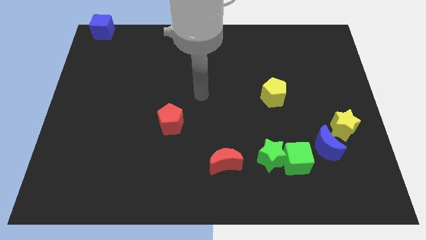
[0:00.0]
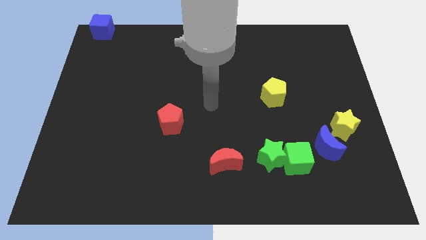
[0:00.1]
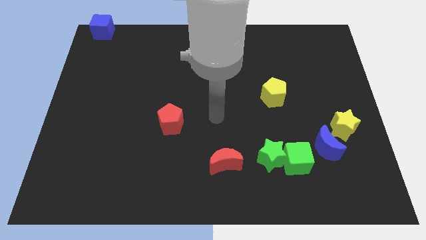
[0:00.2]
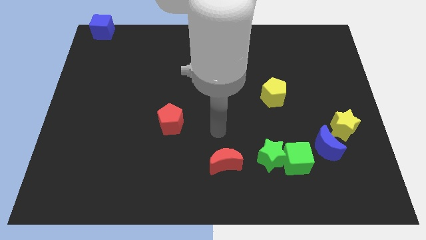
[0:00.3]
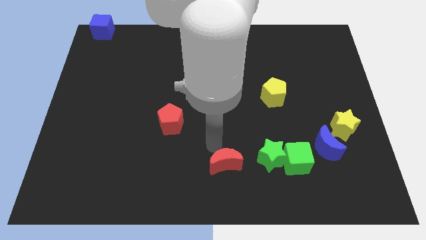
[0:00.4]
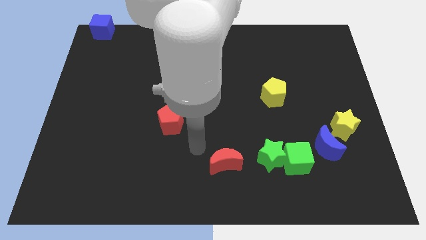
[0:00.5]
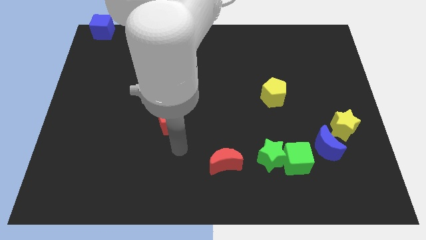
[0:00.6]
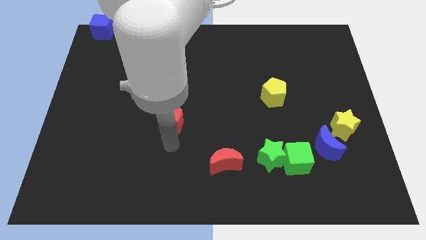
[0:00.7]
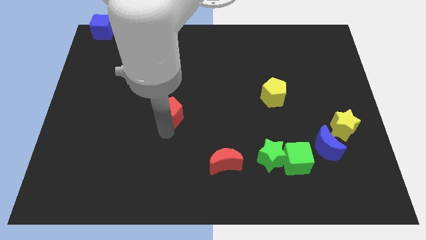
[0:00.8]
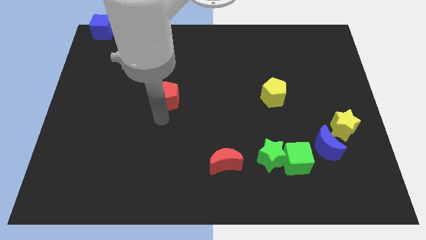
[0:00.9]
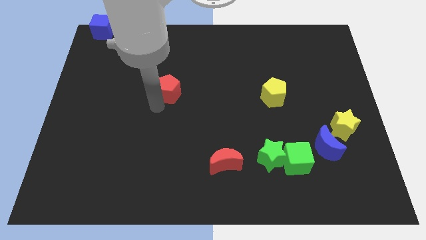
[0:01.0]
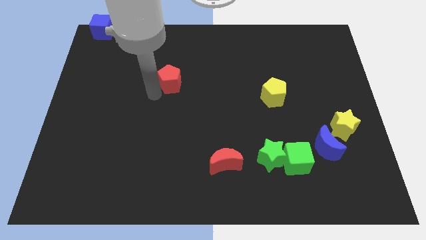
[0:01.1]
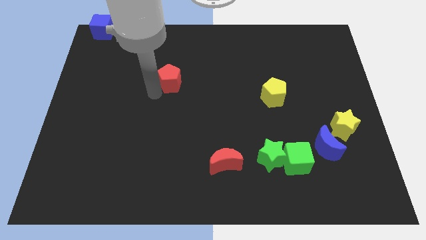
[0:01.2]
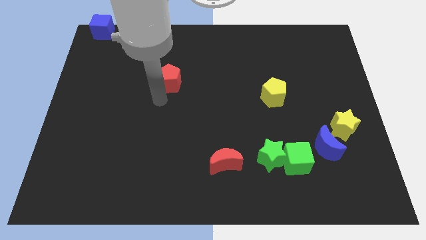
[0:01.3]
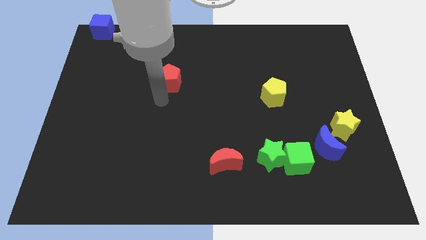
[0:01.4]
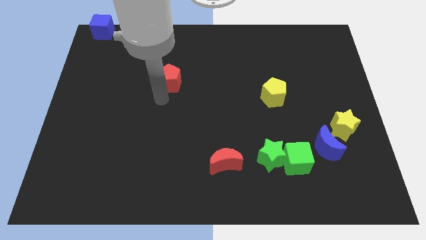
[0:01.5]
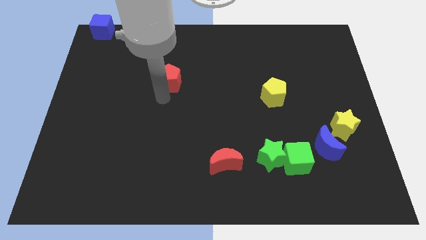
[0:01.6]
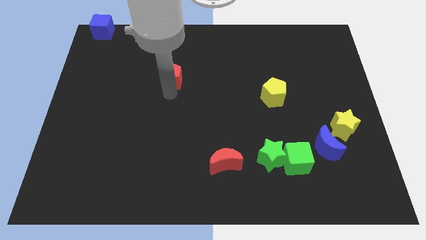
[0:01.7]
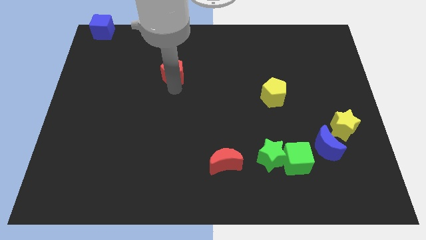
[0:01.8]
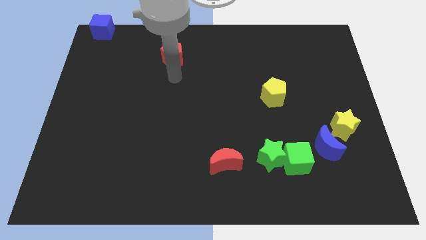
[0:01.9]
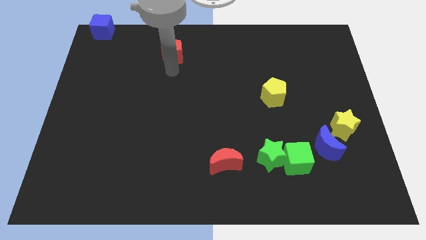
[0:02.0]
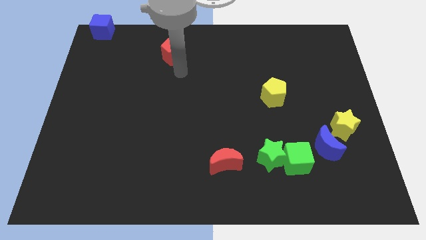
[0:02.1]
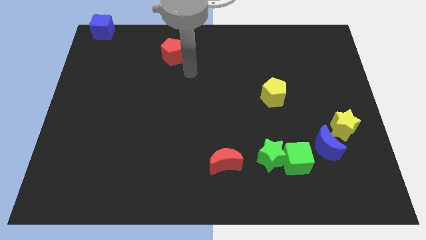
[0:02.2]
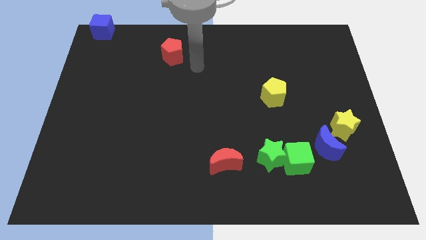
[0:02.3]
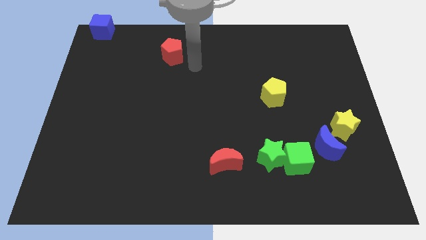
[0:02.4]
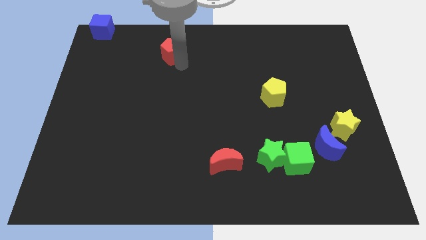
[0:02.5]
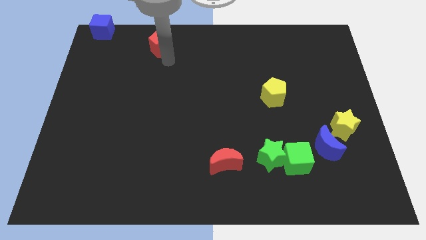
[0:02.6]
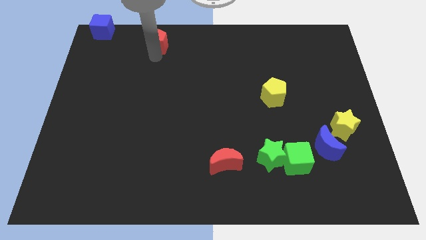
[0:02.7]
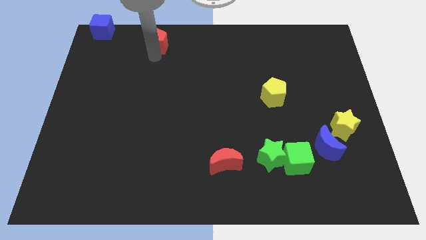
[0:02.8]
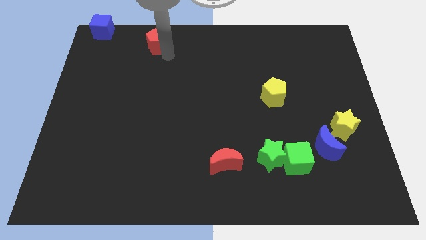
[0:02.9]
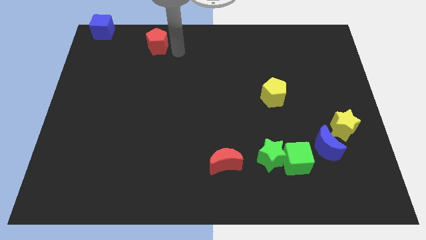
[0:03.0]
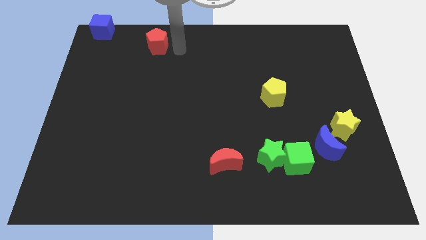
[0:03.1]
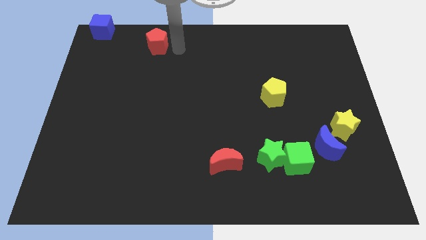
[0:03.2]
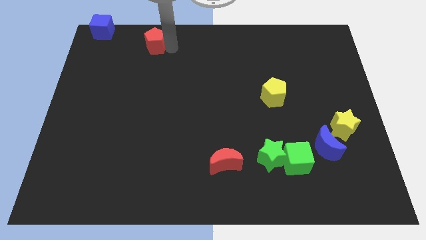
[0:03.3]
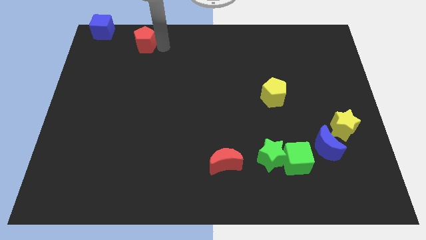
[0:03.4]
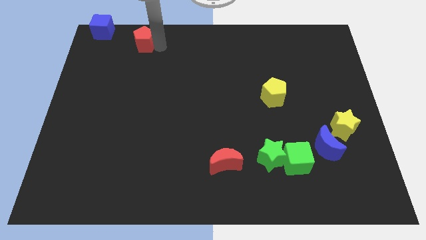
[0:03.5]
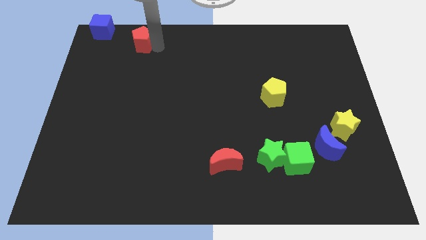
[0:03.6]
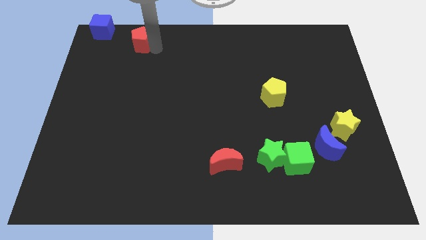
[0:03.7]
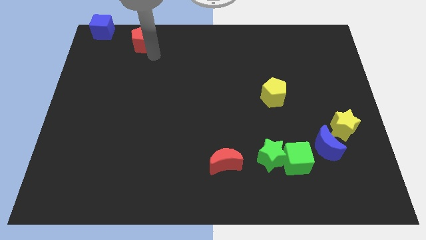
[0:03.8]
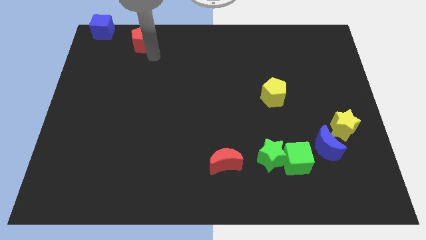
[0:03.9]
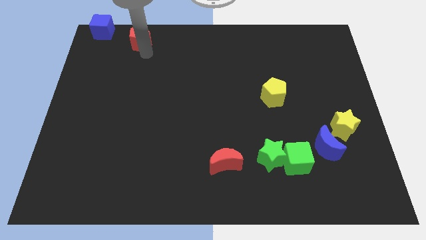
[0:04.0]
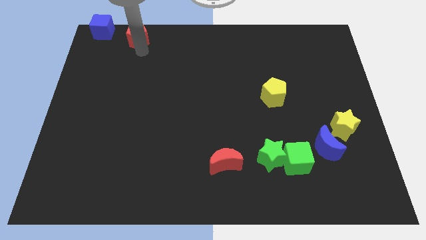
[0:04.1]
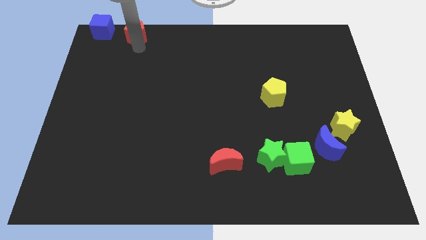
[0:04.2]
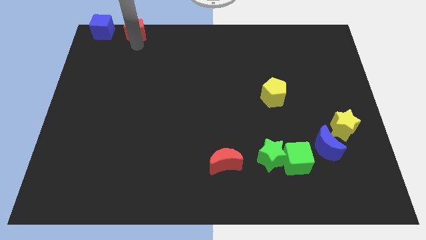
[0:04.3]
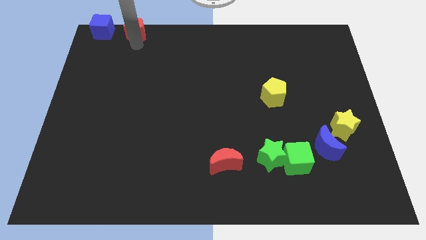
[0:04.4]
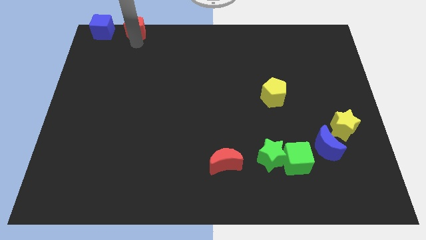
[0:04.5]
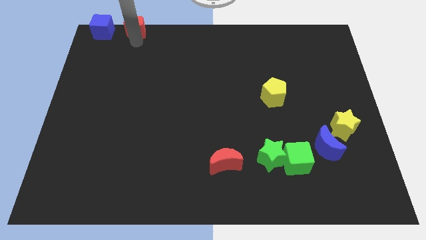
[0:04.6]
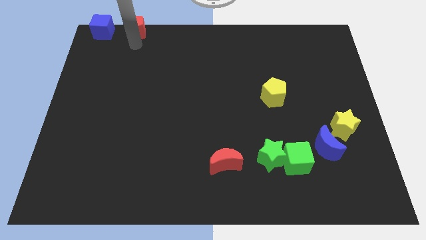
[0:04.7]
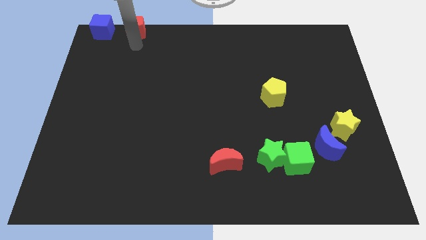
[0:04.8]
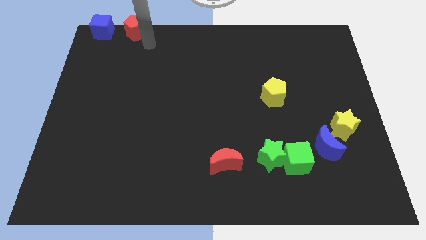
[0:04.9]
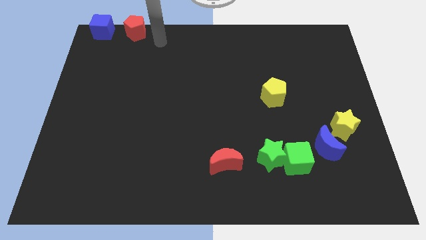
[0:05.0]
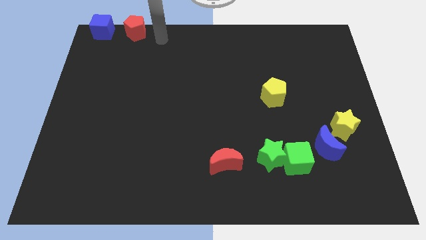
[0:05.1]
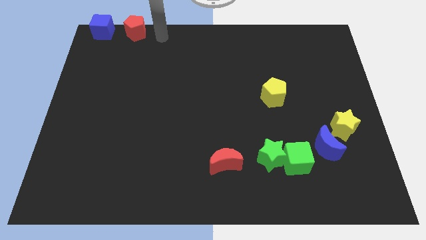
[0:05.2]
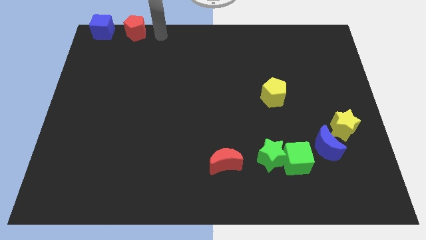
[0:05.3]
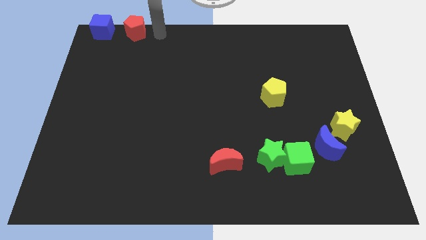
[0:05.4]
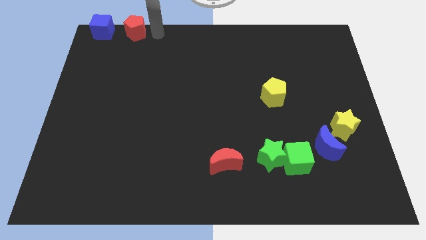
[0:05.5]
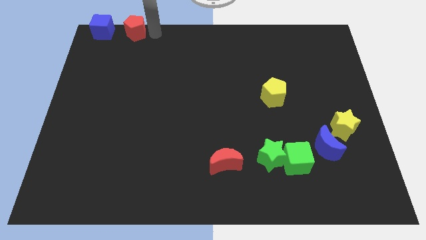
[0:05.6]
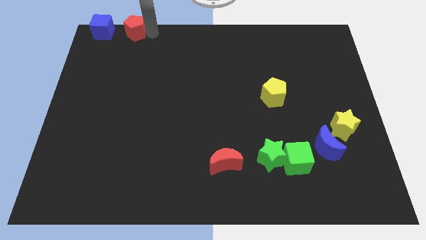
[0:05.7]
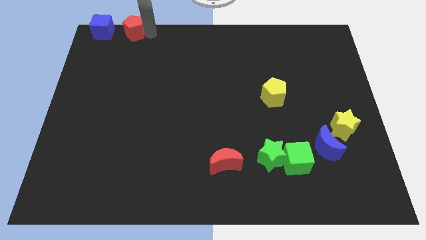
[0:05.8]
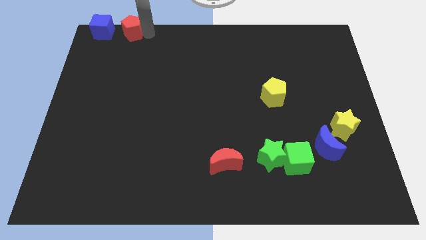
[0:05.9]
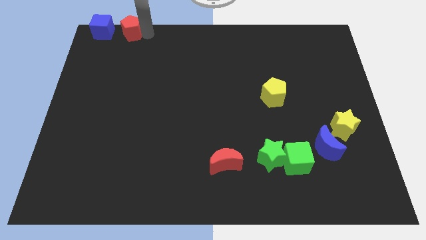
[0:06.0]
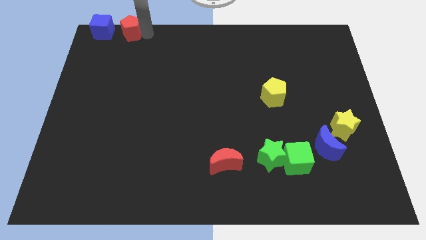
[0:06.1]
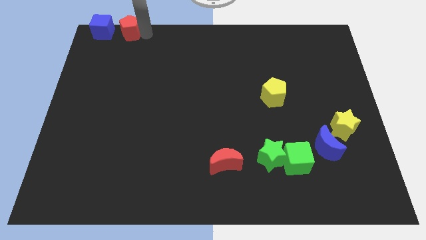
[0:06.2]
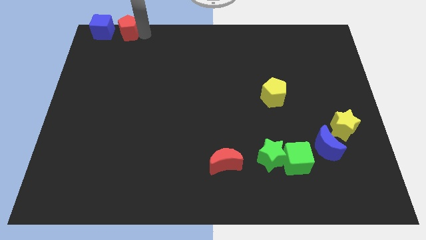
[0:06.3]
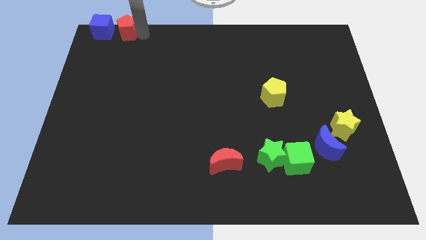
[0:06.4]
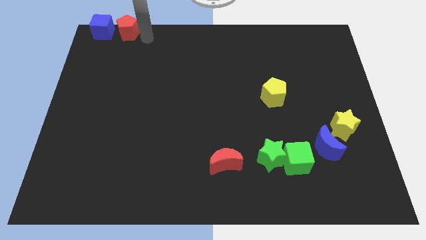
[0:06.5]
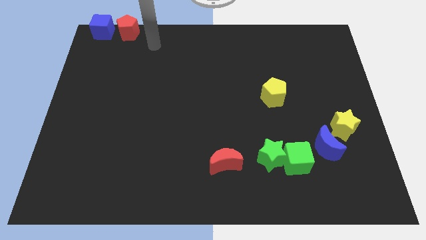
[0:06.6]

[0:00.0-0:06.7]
move the red crescent right to the blue cube

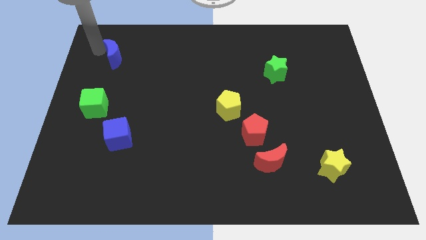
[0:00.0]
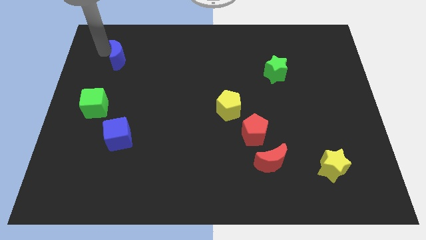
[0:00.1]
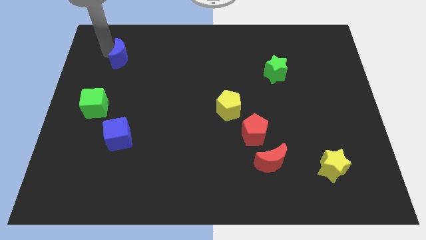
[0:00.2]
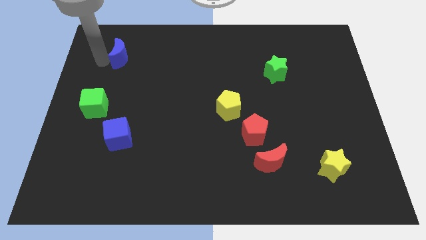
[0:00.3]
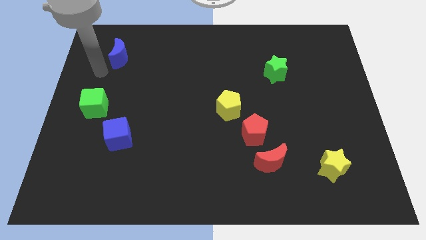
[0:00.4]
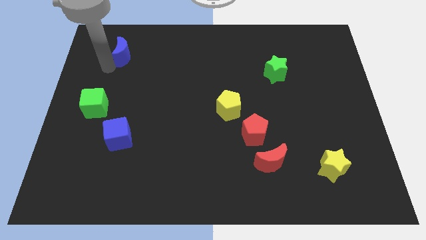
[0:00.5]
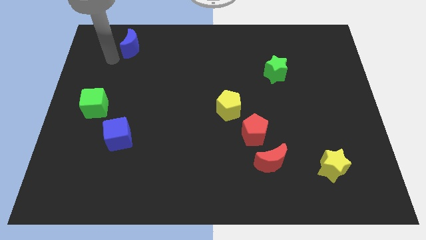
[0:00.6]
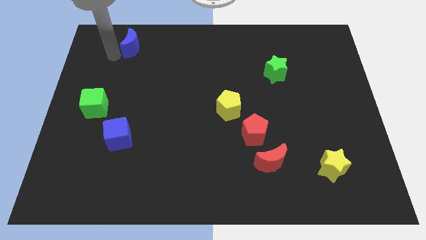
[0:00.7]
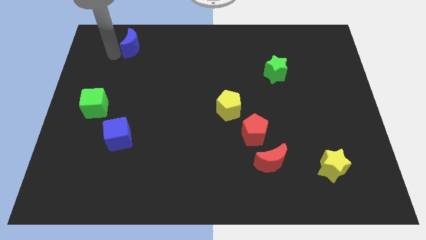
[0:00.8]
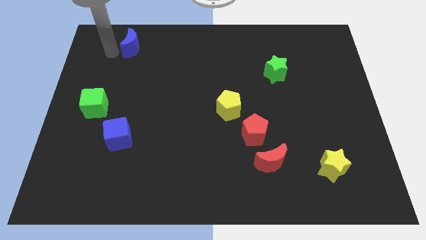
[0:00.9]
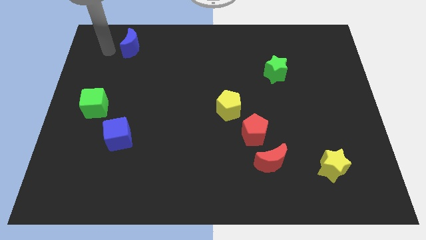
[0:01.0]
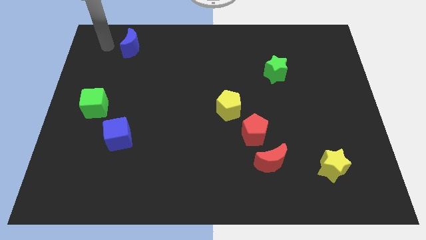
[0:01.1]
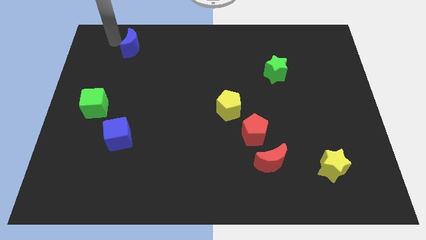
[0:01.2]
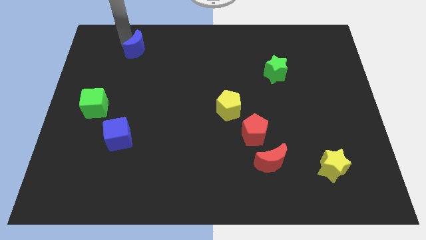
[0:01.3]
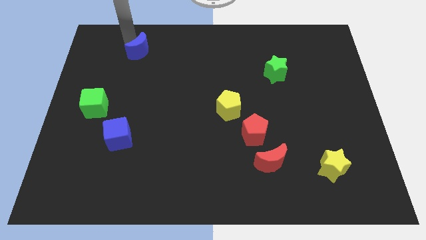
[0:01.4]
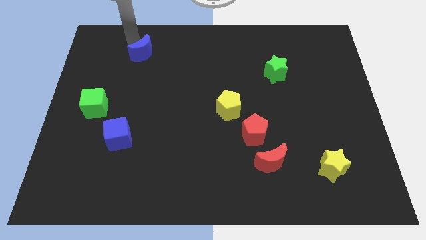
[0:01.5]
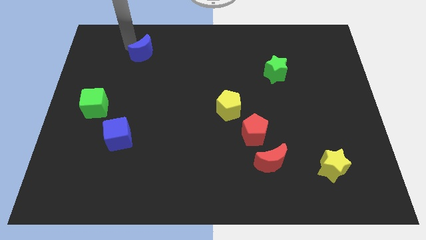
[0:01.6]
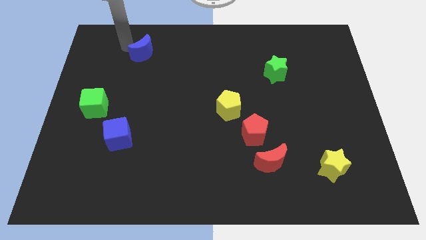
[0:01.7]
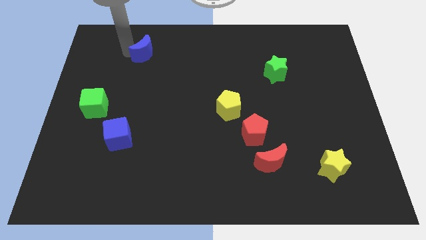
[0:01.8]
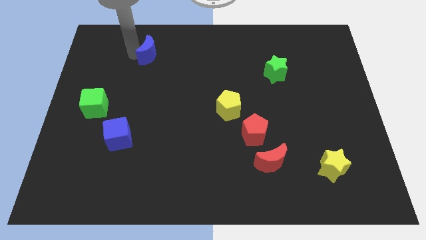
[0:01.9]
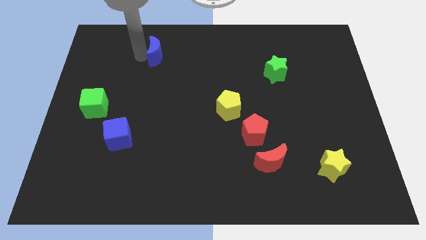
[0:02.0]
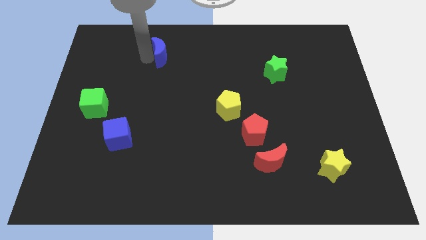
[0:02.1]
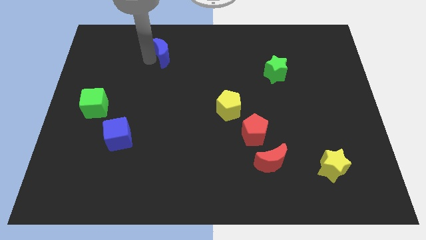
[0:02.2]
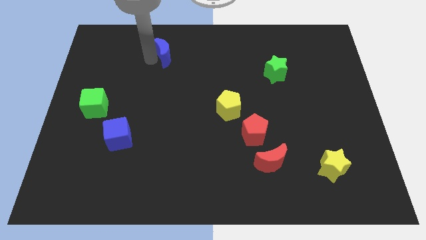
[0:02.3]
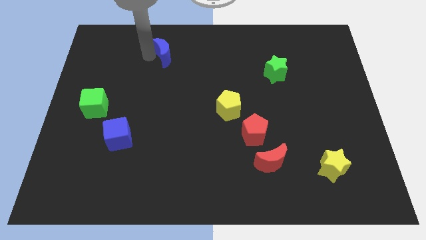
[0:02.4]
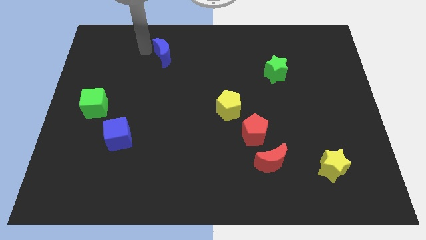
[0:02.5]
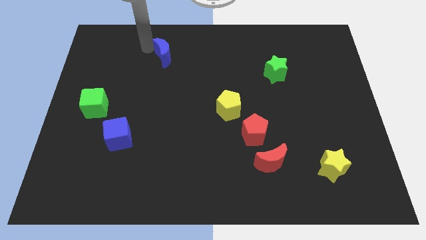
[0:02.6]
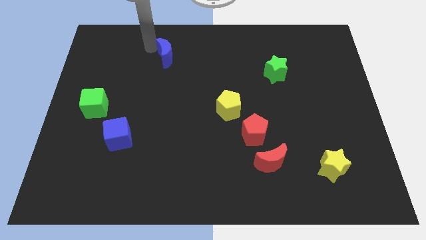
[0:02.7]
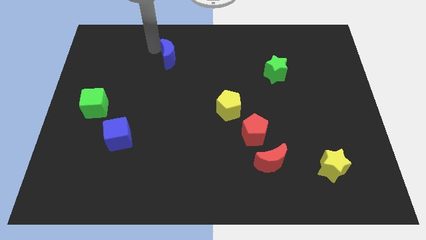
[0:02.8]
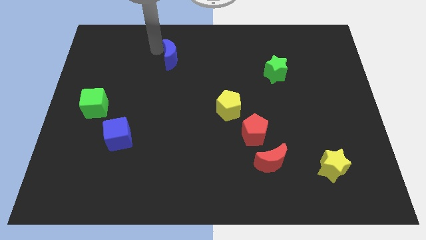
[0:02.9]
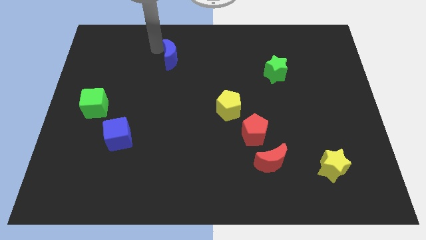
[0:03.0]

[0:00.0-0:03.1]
push blue moon towards the right
